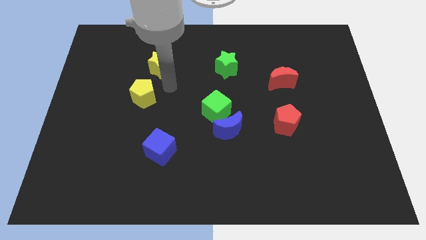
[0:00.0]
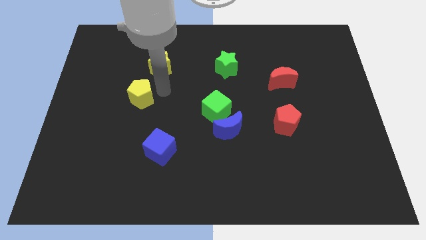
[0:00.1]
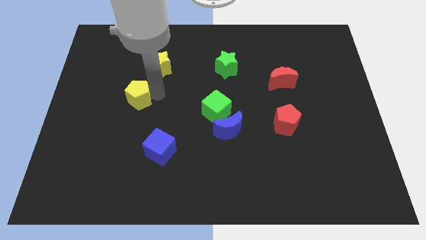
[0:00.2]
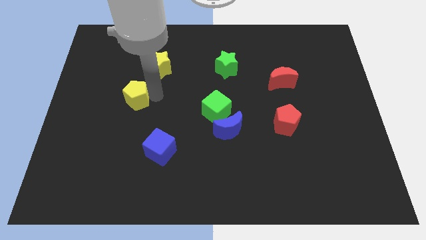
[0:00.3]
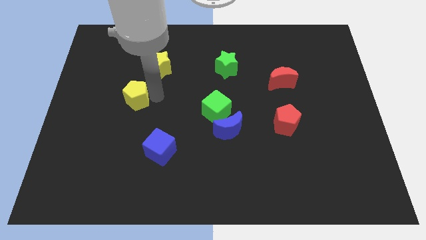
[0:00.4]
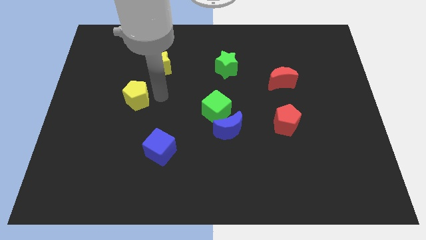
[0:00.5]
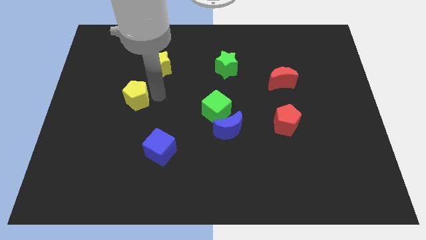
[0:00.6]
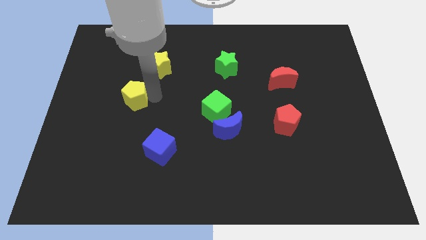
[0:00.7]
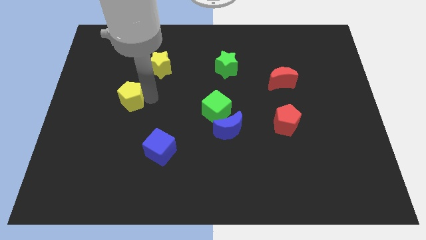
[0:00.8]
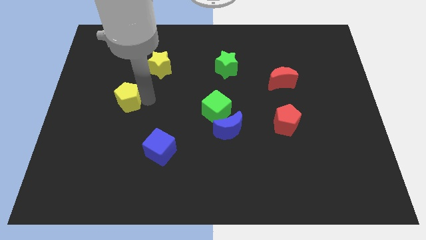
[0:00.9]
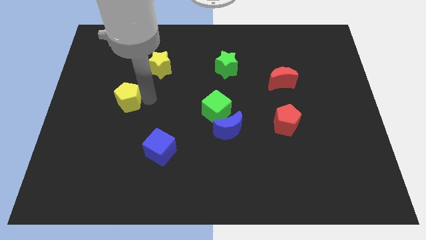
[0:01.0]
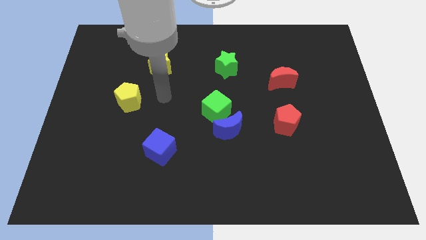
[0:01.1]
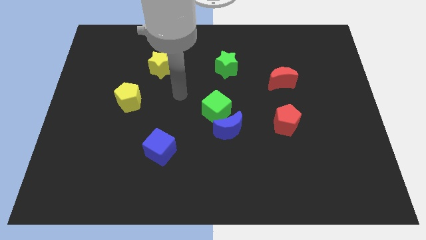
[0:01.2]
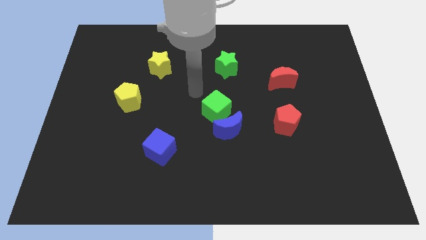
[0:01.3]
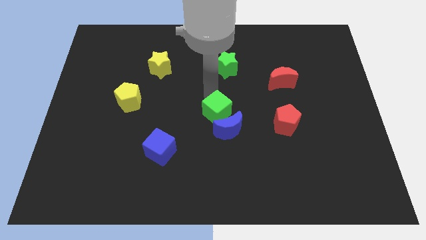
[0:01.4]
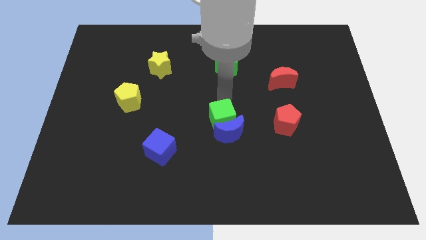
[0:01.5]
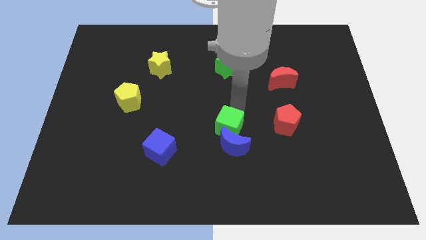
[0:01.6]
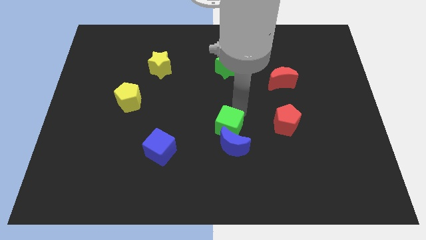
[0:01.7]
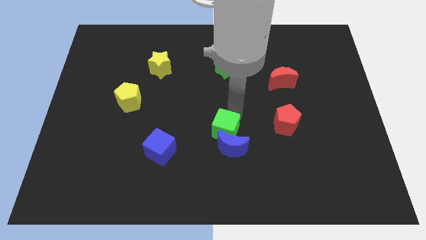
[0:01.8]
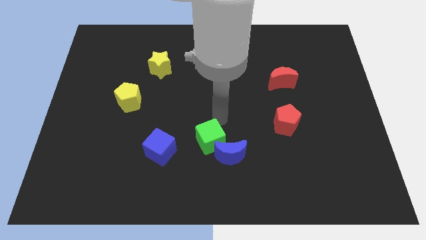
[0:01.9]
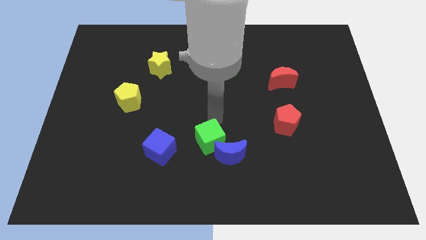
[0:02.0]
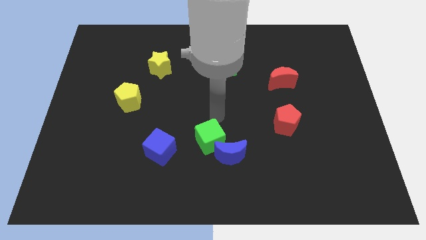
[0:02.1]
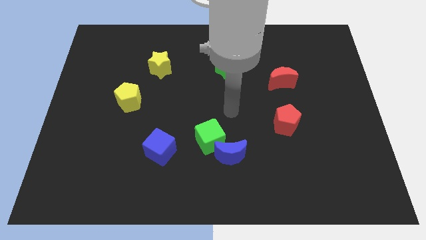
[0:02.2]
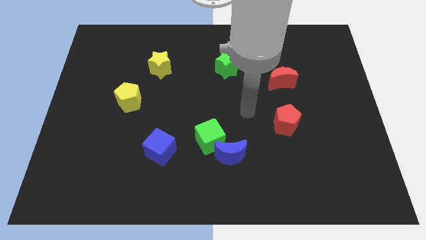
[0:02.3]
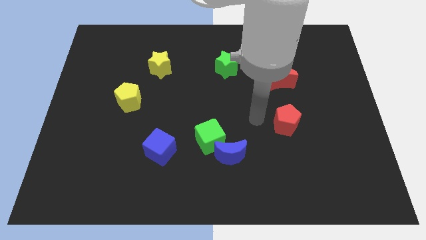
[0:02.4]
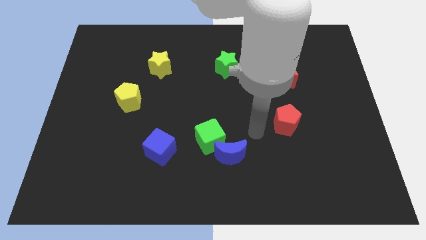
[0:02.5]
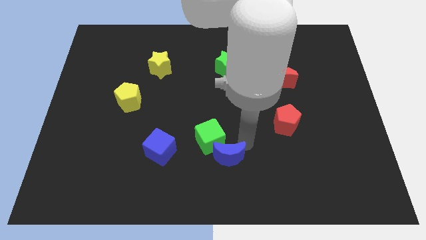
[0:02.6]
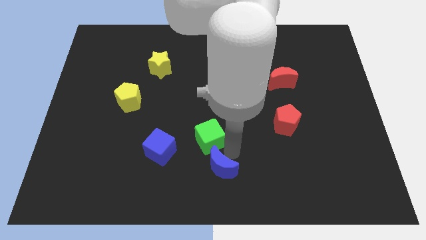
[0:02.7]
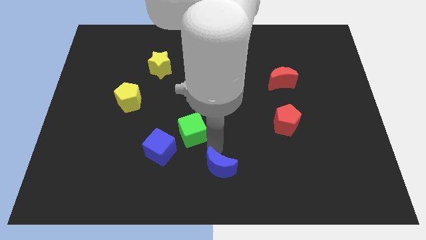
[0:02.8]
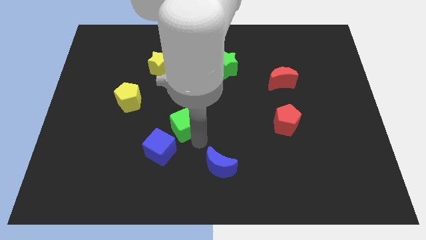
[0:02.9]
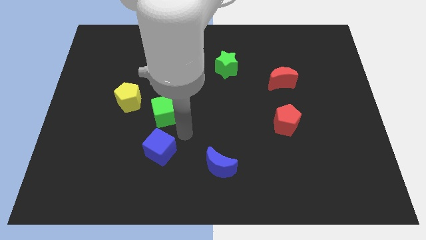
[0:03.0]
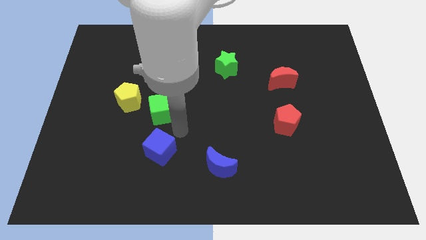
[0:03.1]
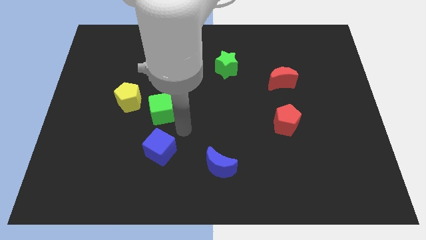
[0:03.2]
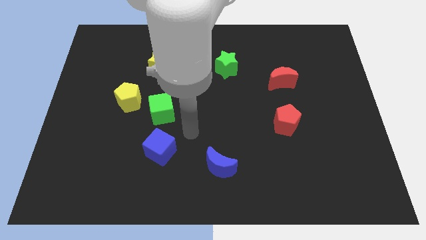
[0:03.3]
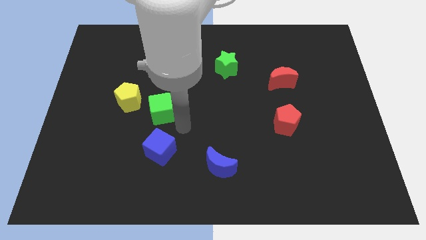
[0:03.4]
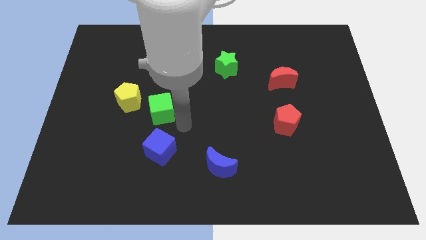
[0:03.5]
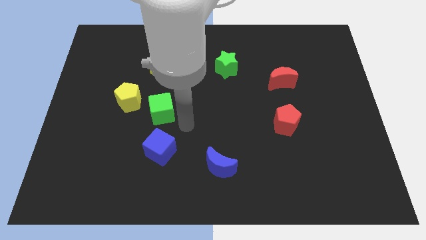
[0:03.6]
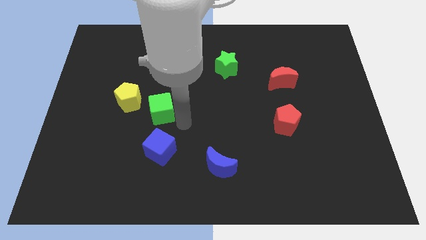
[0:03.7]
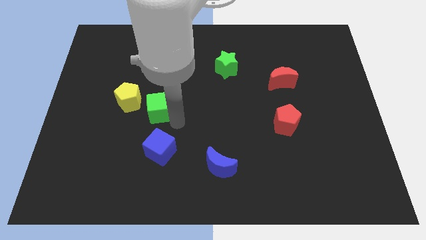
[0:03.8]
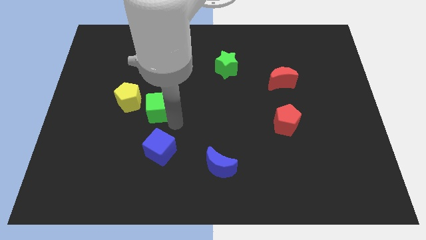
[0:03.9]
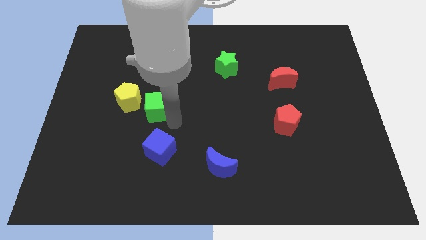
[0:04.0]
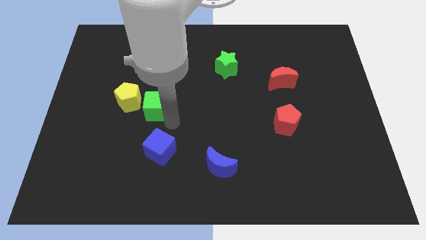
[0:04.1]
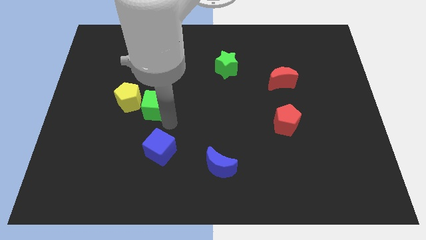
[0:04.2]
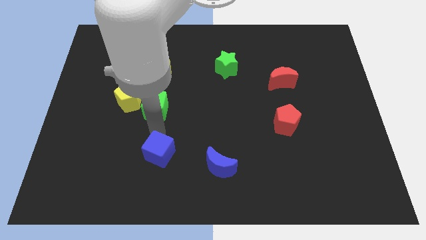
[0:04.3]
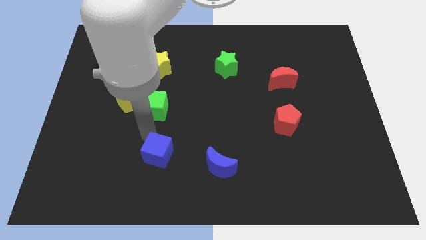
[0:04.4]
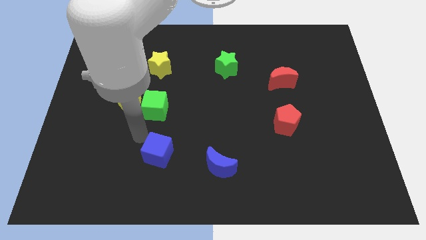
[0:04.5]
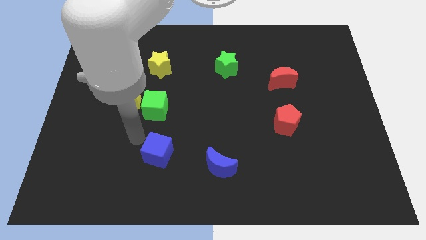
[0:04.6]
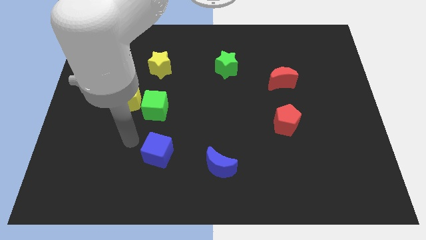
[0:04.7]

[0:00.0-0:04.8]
place the green cube to the bottom right of yellow pentagon

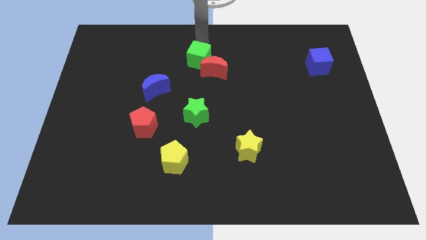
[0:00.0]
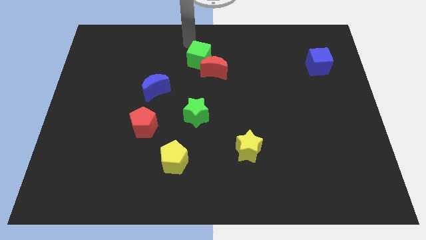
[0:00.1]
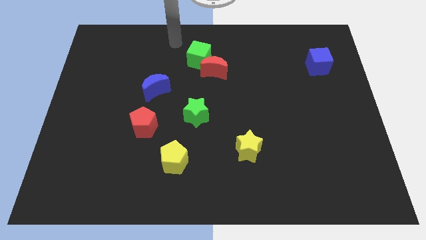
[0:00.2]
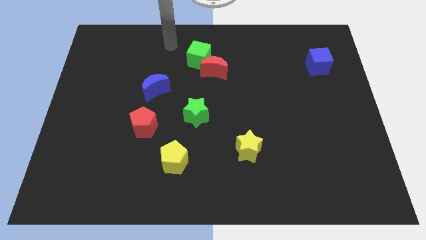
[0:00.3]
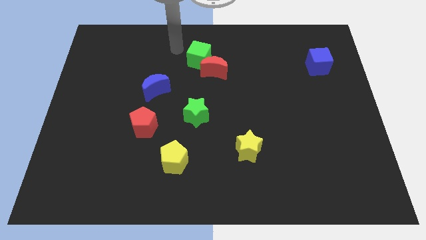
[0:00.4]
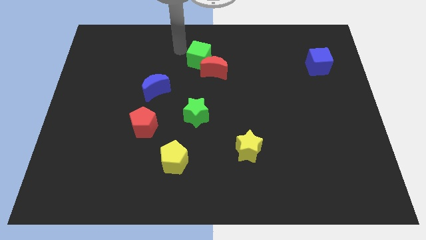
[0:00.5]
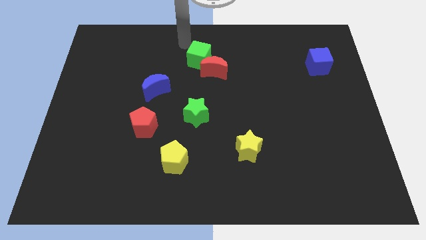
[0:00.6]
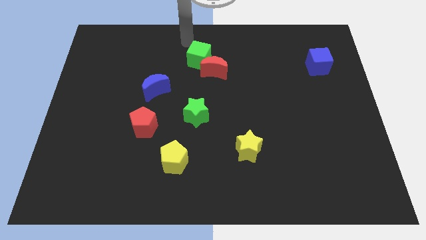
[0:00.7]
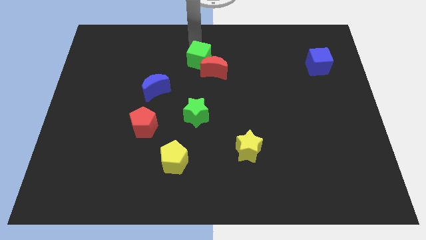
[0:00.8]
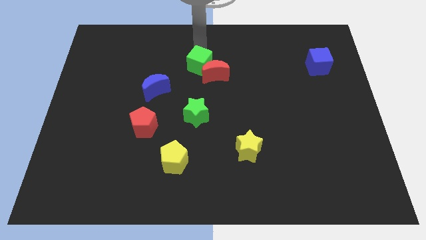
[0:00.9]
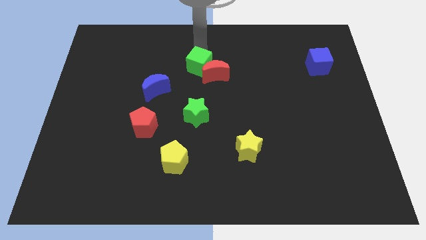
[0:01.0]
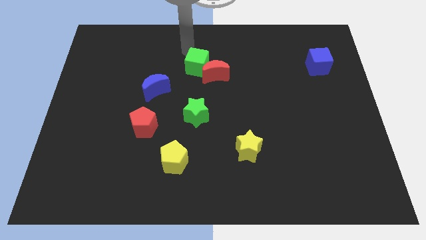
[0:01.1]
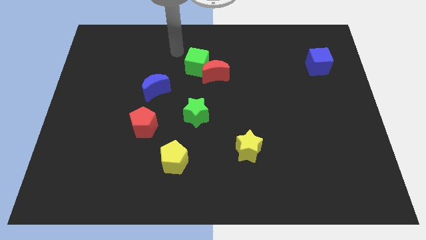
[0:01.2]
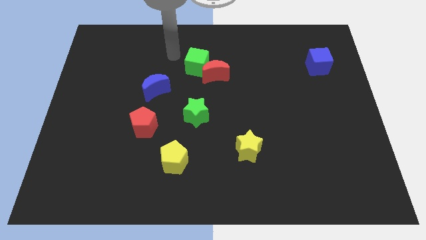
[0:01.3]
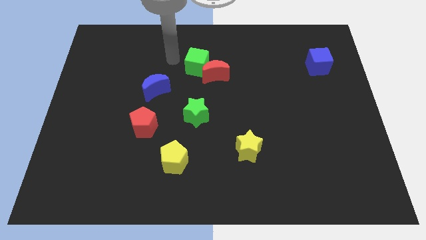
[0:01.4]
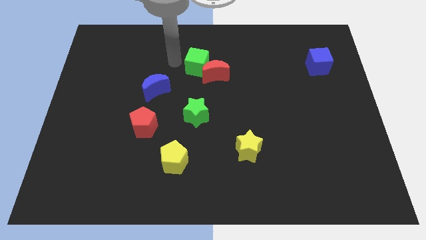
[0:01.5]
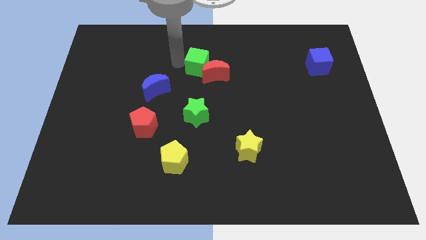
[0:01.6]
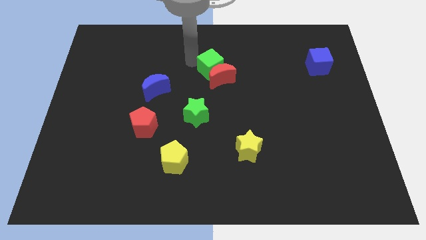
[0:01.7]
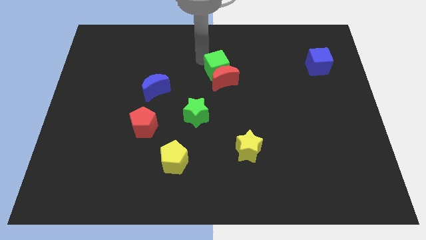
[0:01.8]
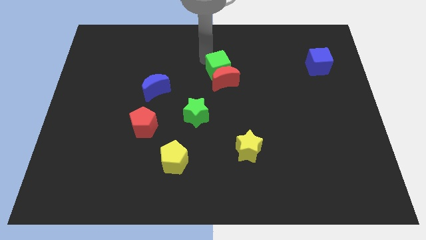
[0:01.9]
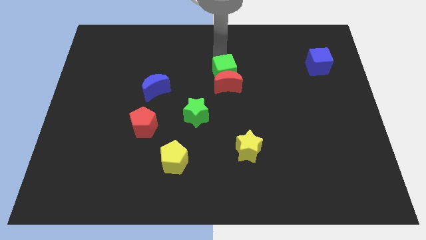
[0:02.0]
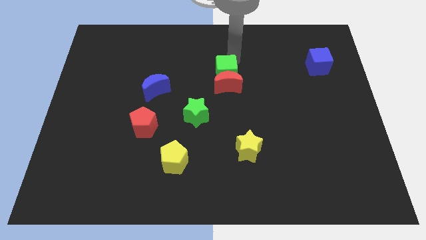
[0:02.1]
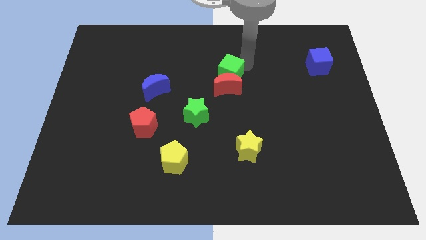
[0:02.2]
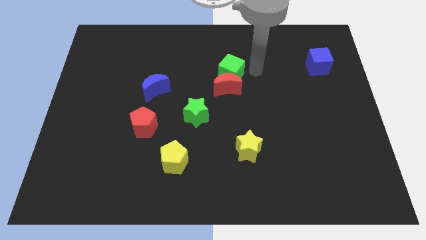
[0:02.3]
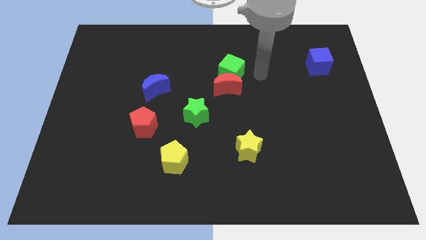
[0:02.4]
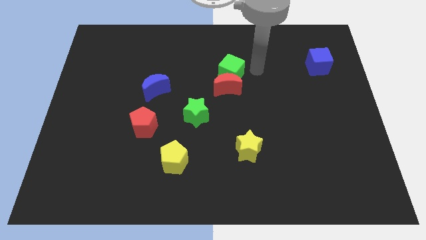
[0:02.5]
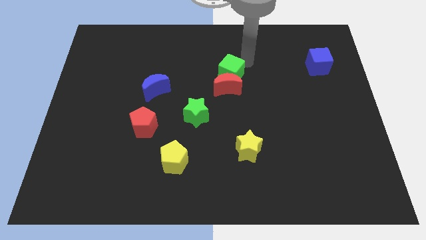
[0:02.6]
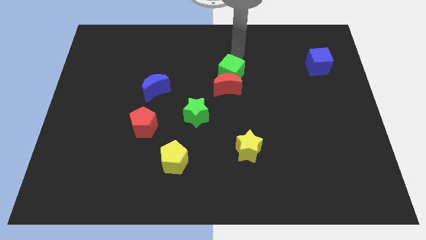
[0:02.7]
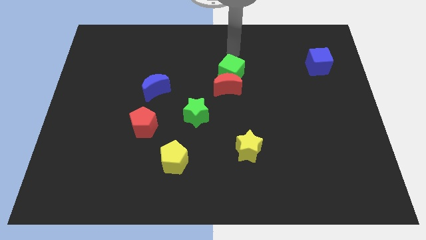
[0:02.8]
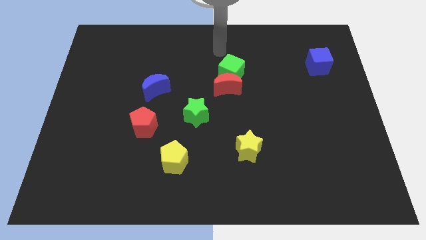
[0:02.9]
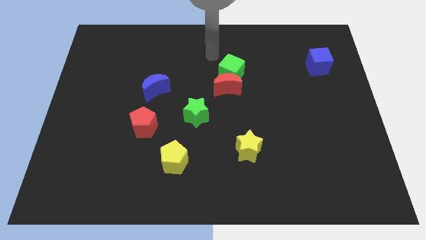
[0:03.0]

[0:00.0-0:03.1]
move the red crescent with the green cube towards the center of the board

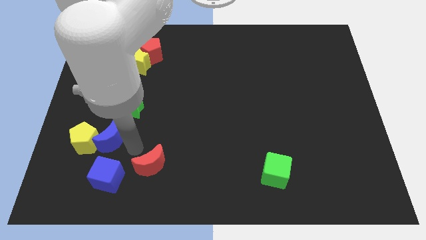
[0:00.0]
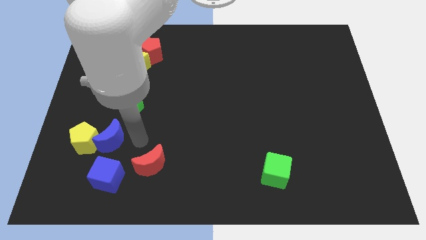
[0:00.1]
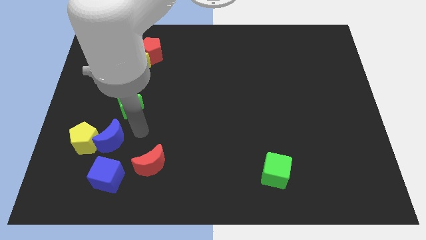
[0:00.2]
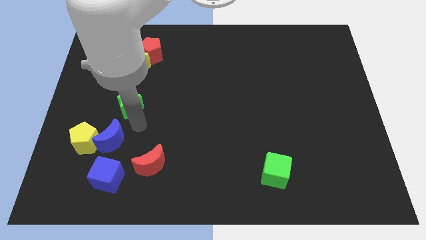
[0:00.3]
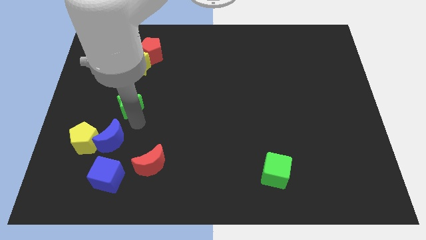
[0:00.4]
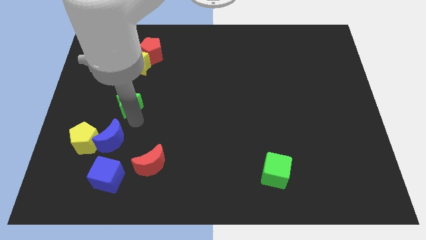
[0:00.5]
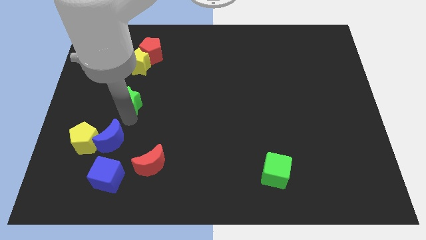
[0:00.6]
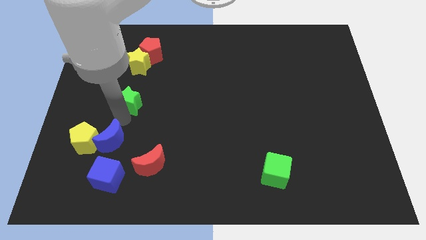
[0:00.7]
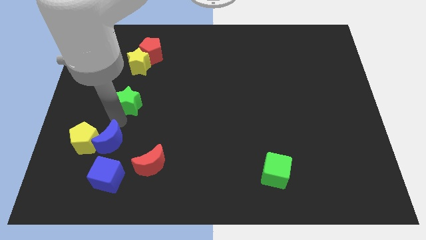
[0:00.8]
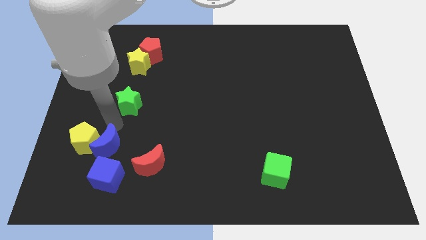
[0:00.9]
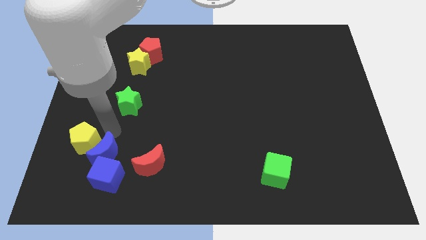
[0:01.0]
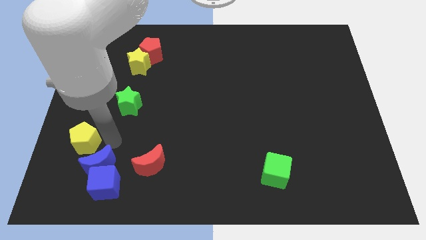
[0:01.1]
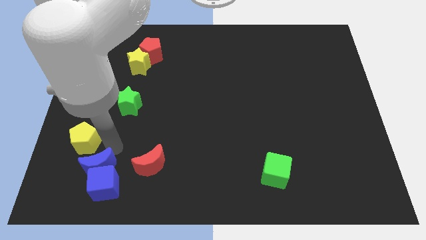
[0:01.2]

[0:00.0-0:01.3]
move the blue crescent into the blue cube
